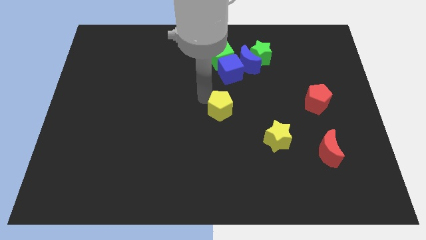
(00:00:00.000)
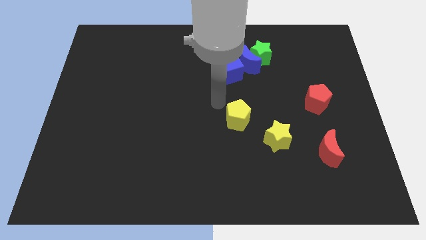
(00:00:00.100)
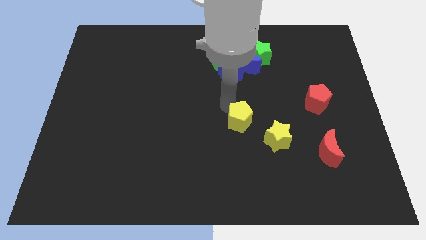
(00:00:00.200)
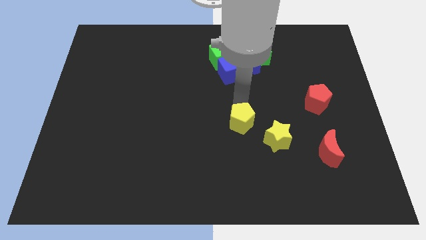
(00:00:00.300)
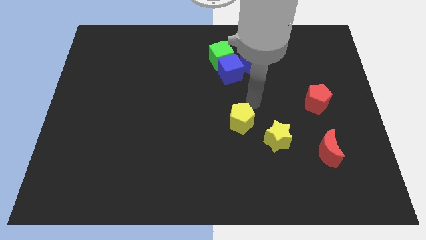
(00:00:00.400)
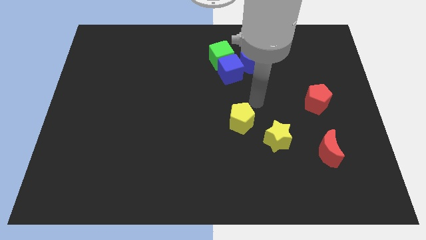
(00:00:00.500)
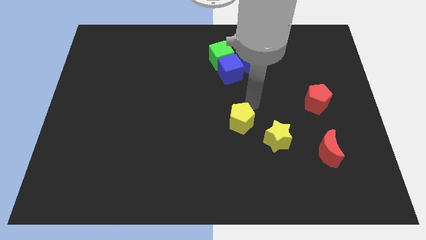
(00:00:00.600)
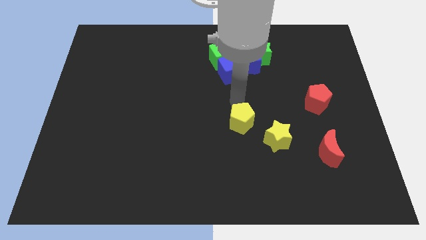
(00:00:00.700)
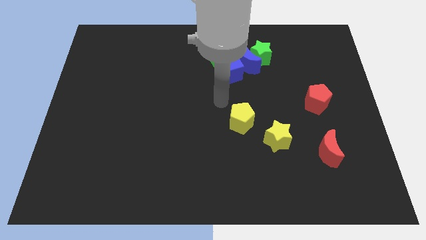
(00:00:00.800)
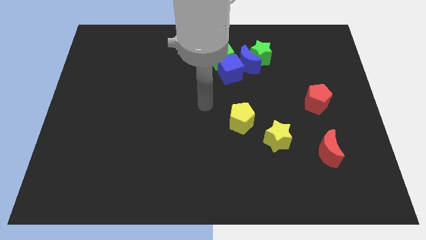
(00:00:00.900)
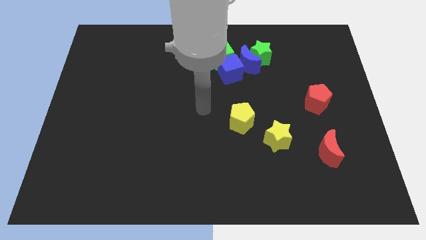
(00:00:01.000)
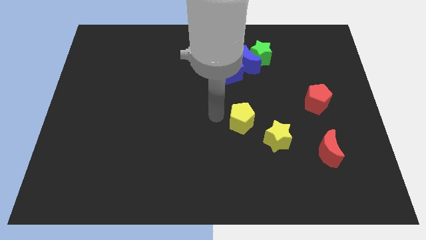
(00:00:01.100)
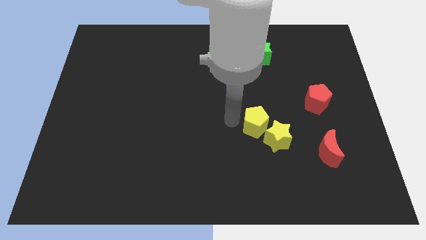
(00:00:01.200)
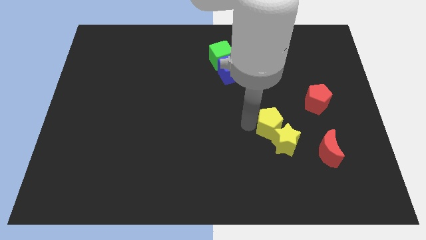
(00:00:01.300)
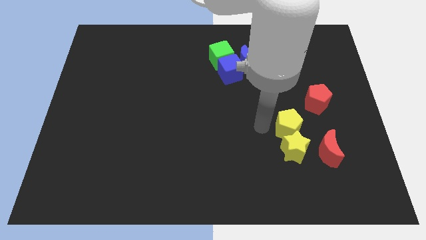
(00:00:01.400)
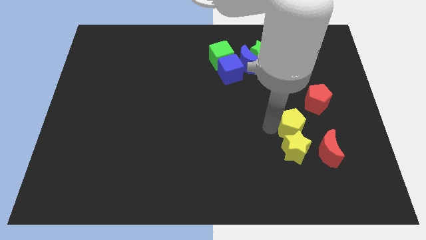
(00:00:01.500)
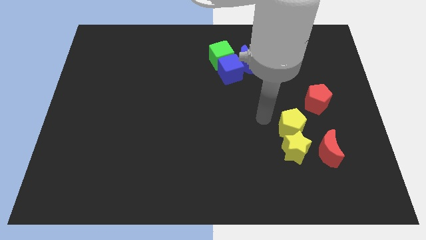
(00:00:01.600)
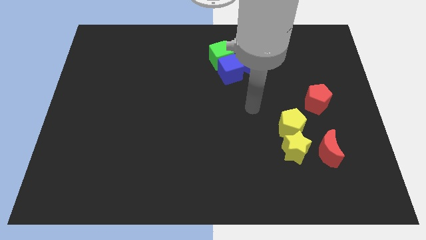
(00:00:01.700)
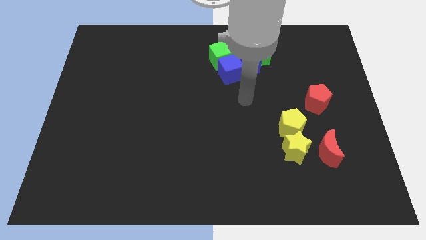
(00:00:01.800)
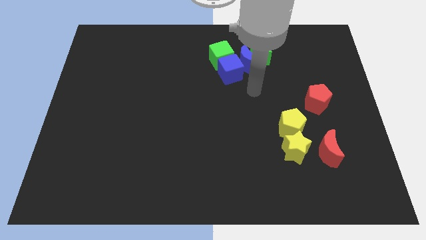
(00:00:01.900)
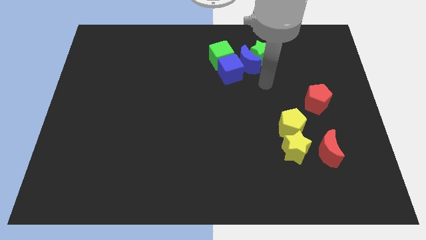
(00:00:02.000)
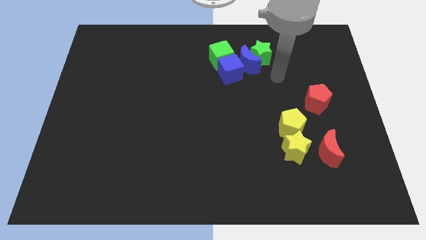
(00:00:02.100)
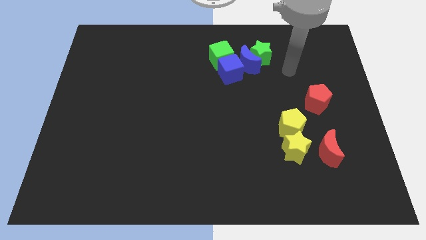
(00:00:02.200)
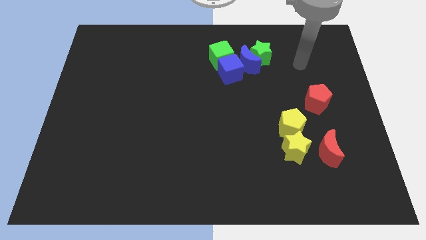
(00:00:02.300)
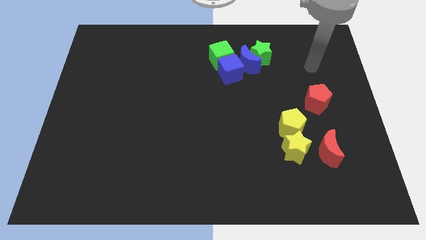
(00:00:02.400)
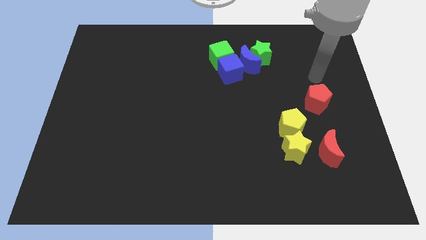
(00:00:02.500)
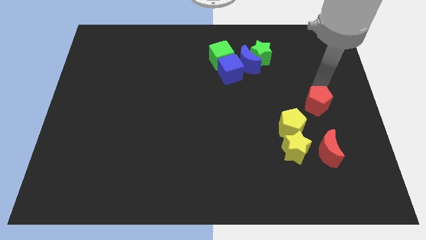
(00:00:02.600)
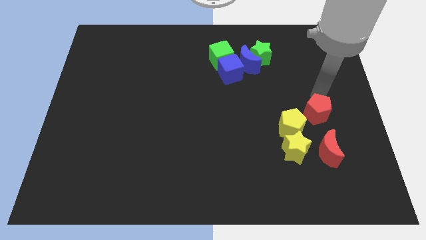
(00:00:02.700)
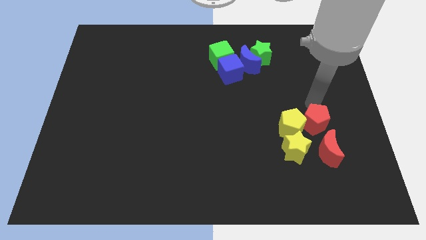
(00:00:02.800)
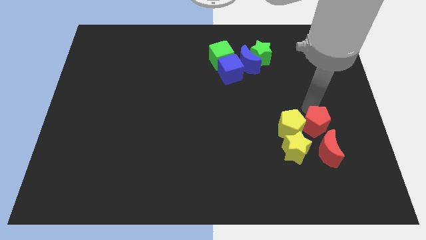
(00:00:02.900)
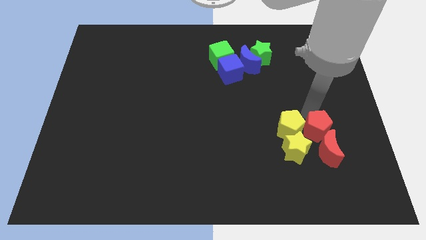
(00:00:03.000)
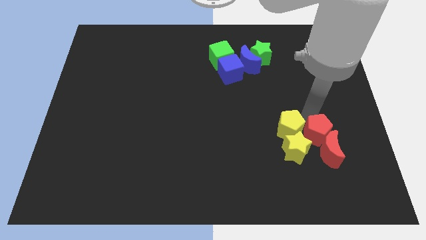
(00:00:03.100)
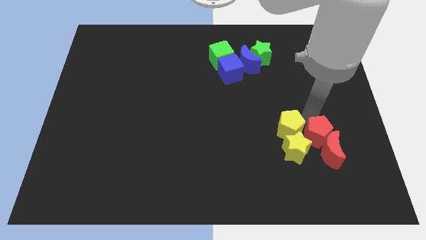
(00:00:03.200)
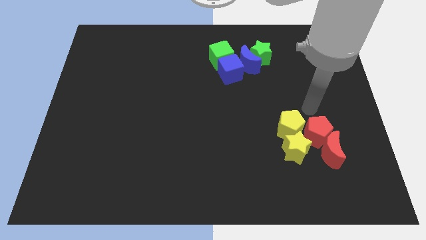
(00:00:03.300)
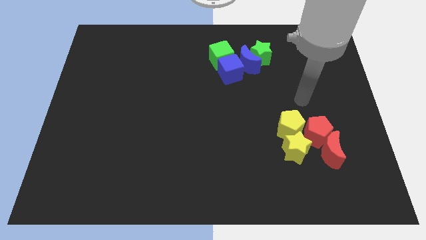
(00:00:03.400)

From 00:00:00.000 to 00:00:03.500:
join the red and yellow blocks at the bottom right of the board

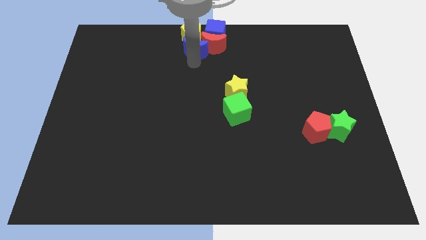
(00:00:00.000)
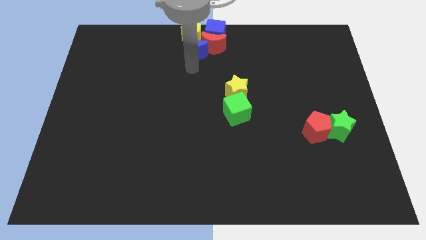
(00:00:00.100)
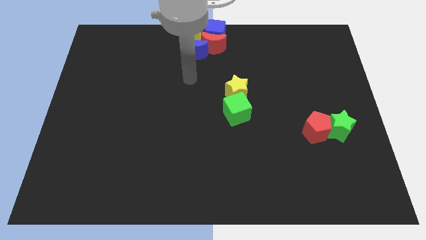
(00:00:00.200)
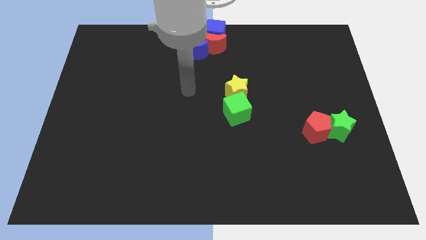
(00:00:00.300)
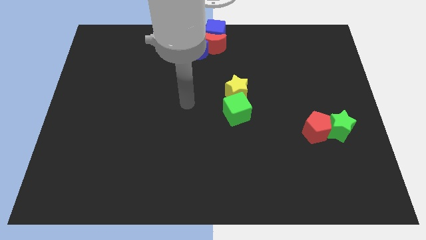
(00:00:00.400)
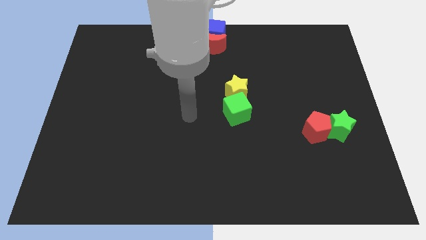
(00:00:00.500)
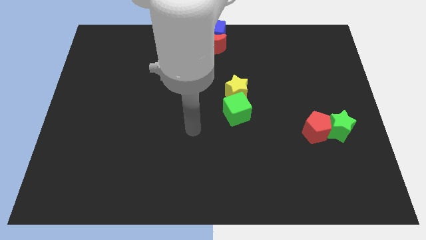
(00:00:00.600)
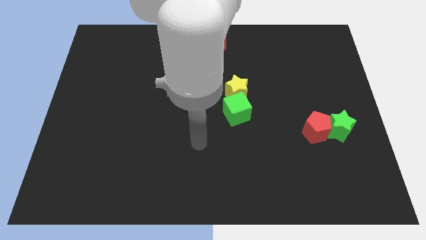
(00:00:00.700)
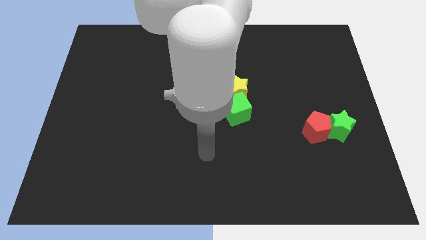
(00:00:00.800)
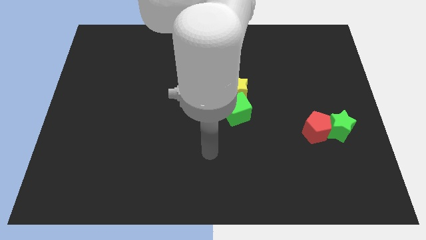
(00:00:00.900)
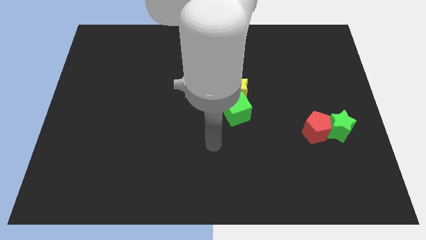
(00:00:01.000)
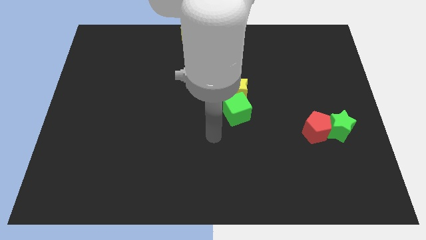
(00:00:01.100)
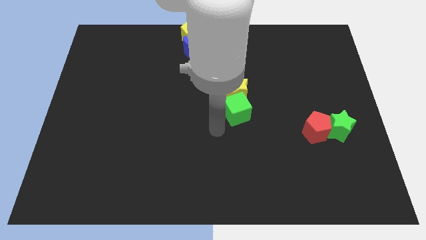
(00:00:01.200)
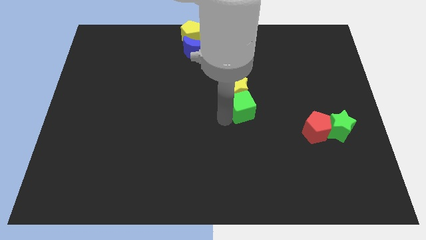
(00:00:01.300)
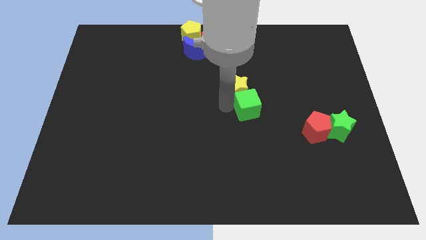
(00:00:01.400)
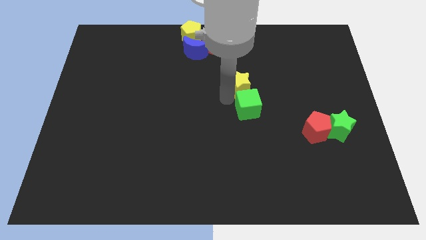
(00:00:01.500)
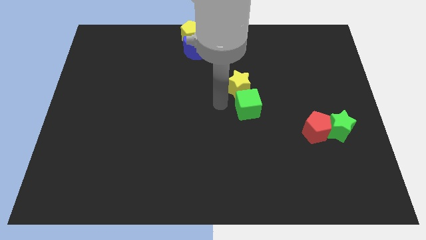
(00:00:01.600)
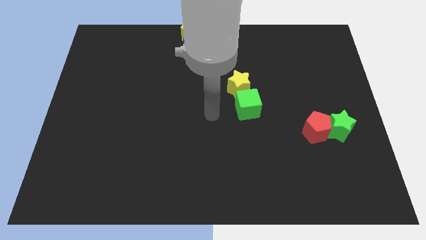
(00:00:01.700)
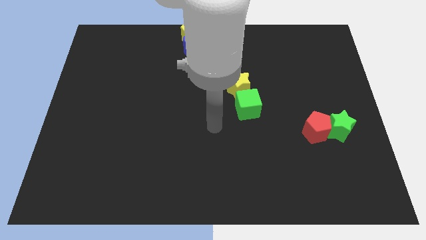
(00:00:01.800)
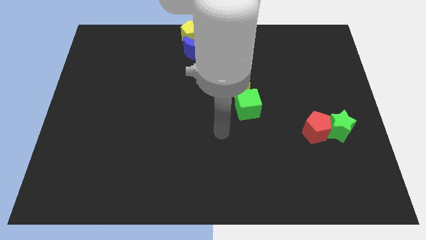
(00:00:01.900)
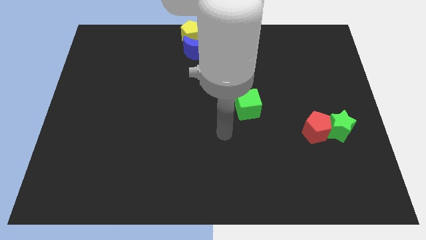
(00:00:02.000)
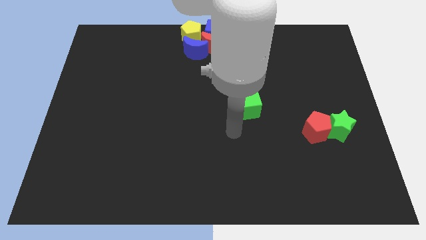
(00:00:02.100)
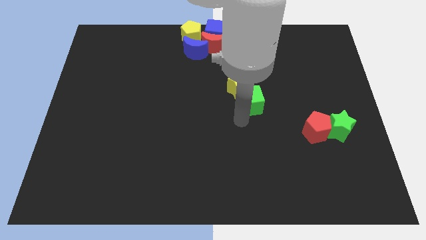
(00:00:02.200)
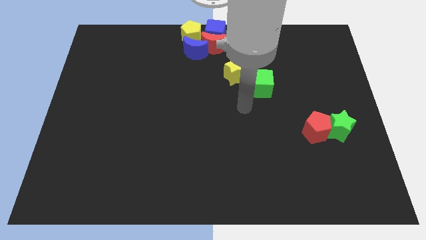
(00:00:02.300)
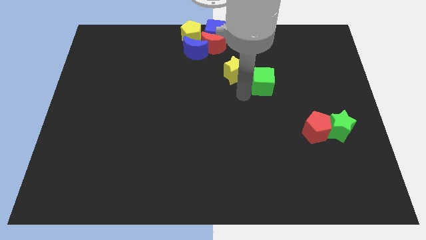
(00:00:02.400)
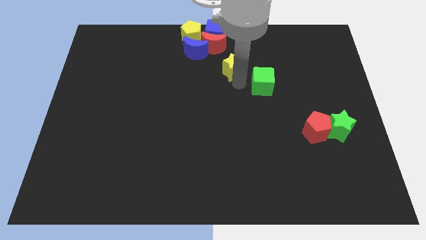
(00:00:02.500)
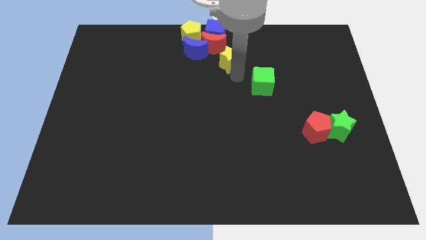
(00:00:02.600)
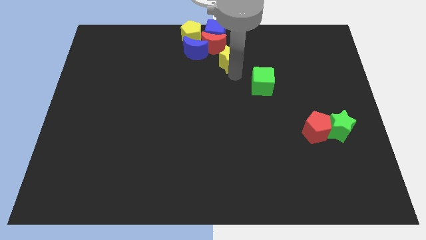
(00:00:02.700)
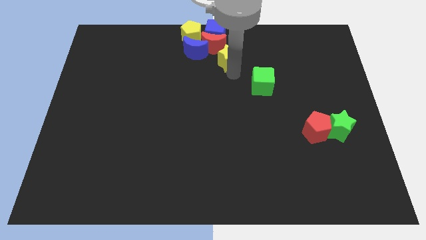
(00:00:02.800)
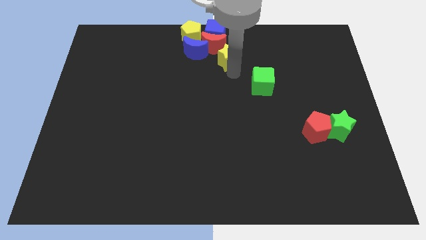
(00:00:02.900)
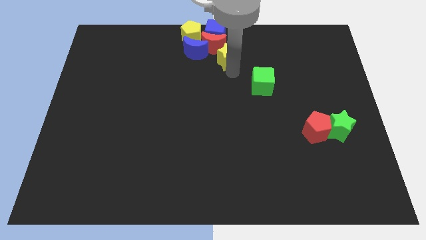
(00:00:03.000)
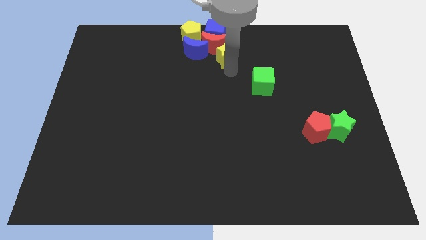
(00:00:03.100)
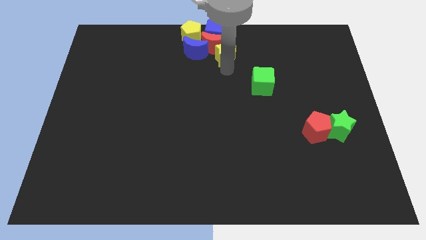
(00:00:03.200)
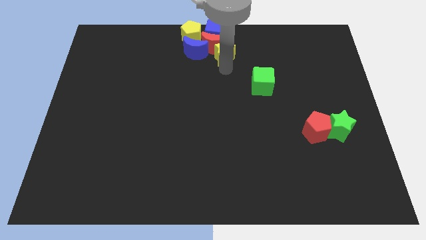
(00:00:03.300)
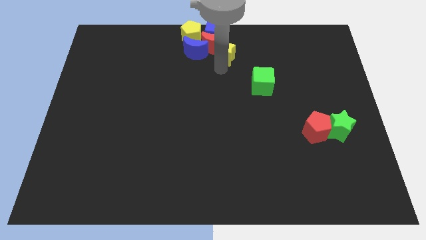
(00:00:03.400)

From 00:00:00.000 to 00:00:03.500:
move the yellow star to the bottom of the red crescent

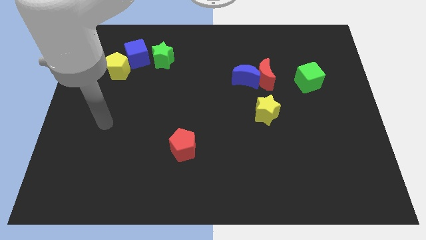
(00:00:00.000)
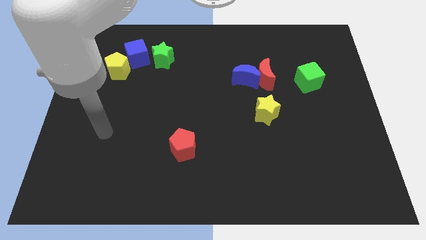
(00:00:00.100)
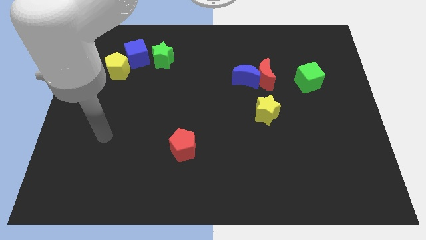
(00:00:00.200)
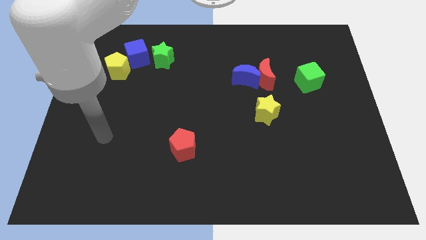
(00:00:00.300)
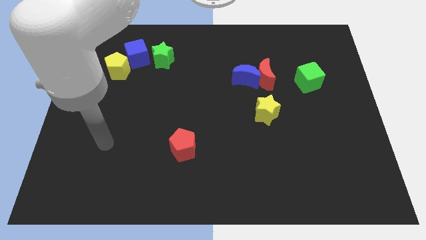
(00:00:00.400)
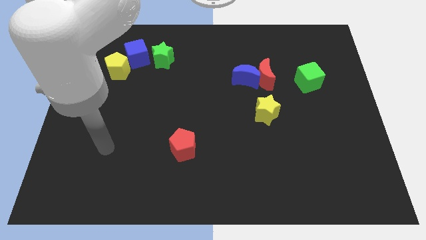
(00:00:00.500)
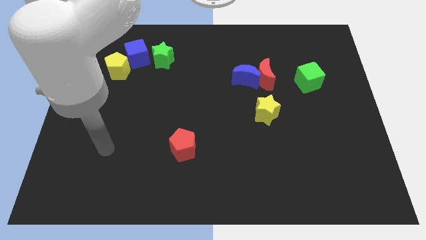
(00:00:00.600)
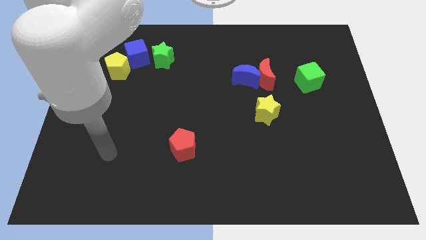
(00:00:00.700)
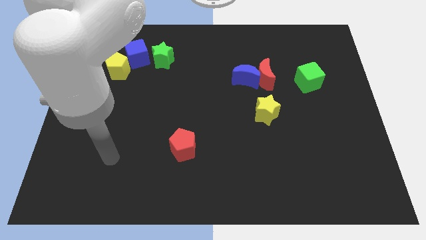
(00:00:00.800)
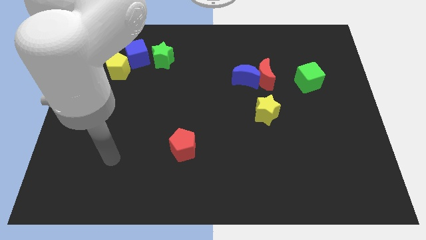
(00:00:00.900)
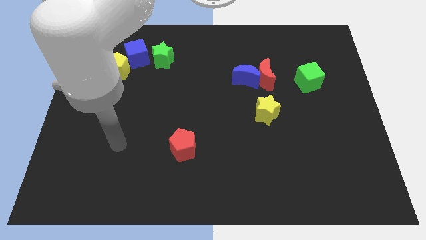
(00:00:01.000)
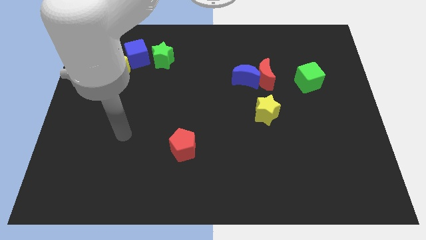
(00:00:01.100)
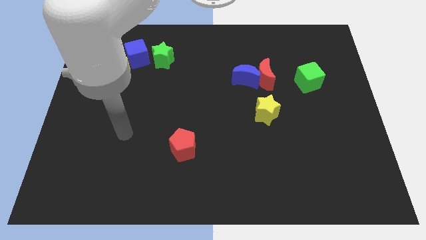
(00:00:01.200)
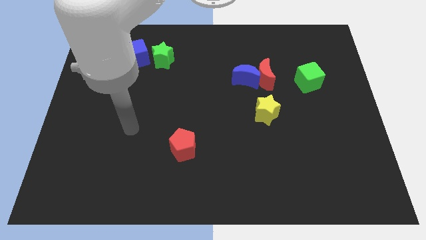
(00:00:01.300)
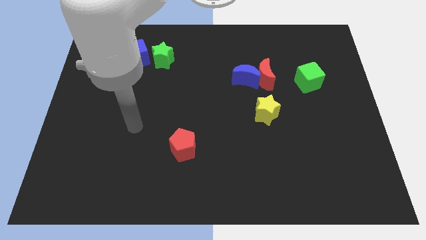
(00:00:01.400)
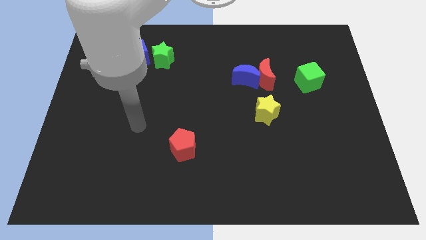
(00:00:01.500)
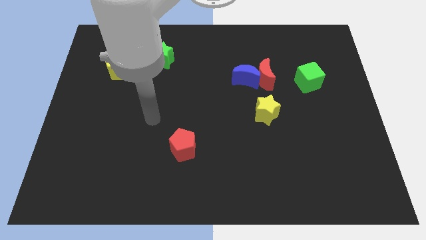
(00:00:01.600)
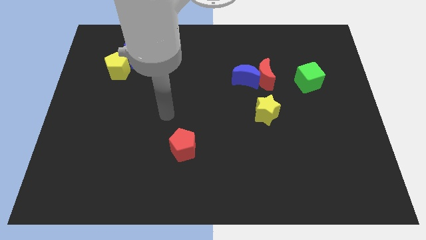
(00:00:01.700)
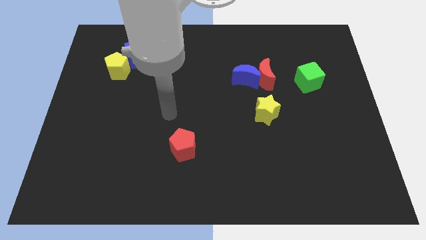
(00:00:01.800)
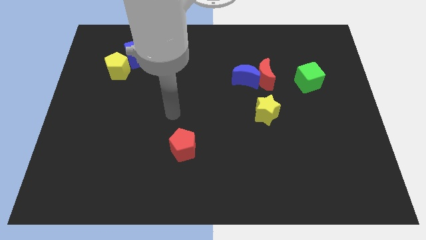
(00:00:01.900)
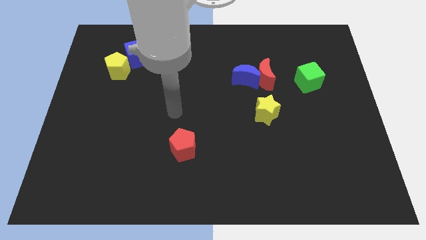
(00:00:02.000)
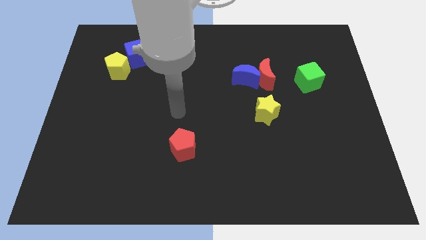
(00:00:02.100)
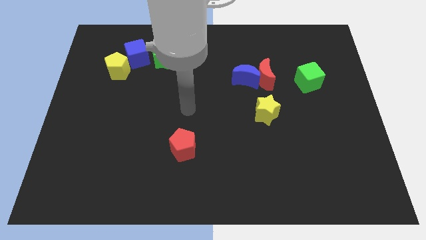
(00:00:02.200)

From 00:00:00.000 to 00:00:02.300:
point your arm at the top of the red pentagon
